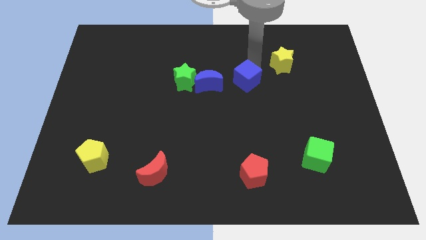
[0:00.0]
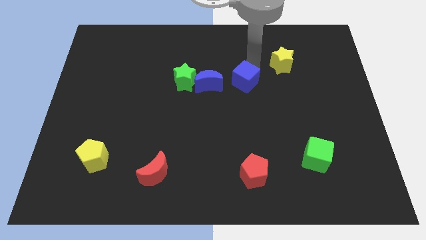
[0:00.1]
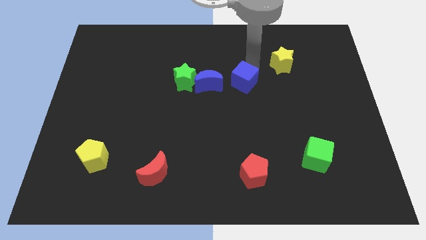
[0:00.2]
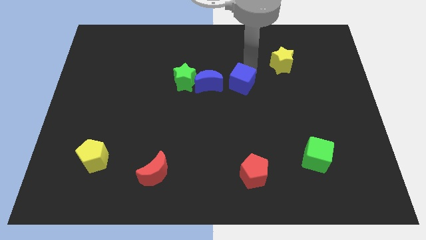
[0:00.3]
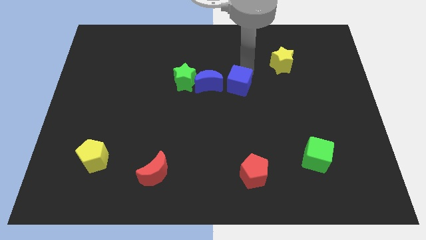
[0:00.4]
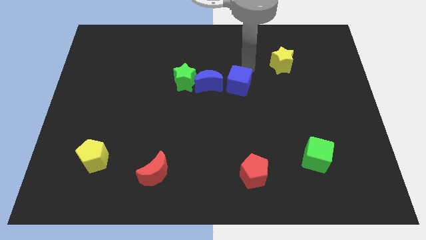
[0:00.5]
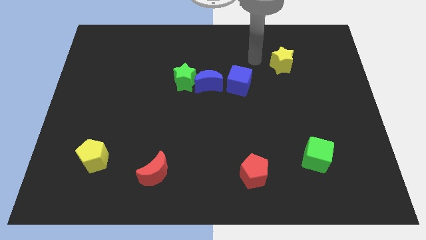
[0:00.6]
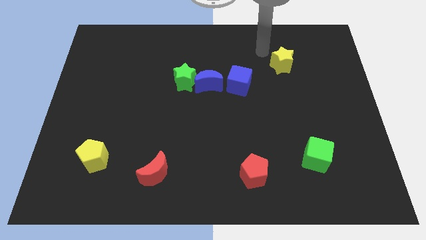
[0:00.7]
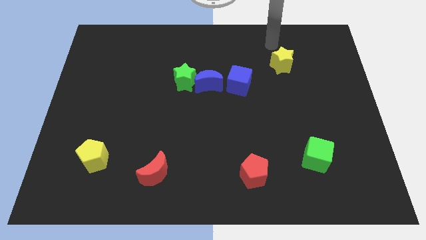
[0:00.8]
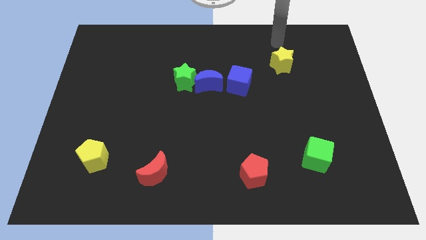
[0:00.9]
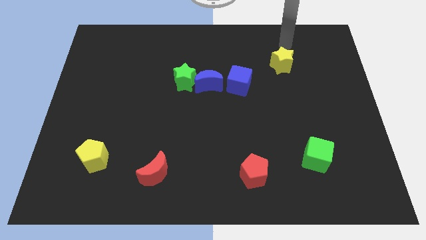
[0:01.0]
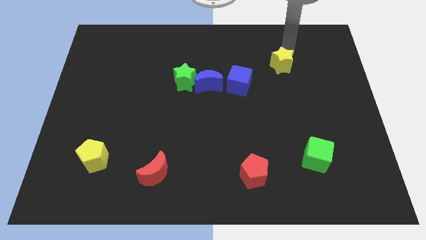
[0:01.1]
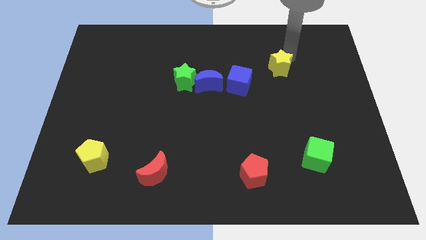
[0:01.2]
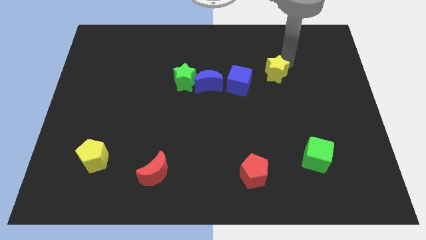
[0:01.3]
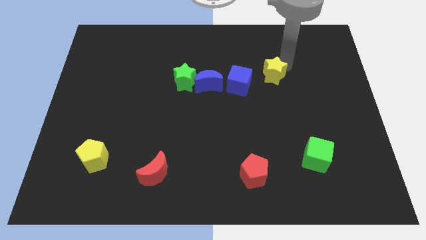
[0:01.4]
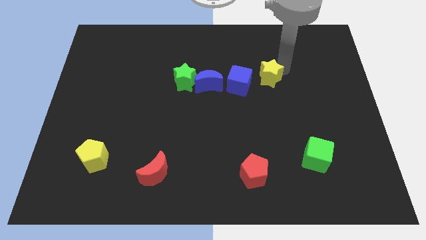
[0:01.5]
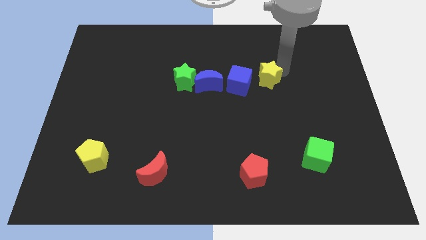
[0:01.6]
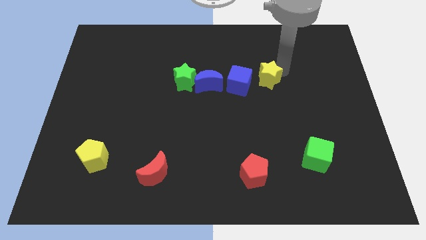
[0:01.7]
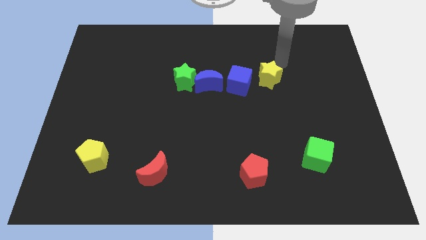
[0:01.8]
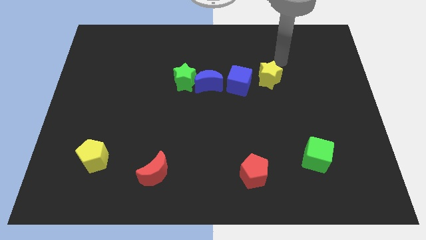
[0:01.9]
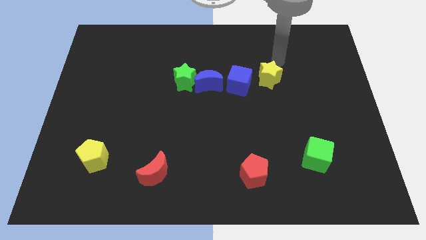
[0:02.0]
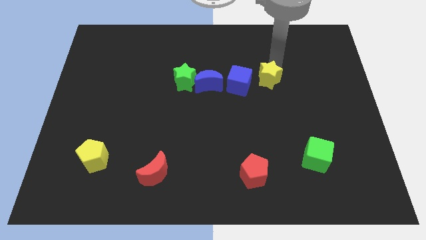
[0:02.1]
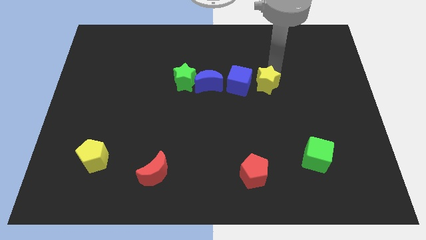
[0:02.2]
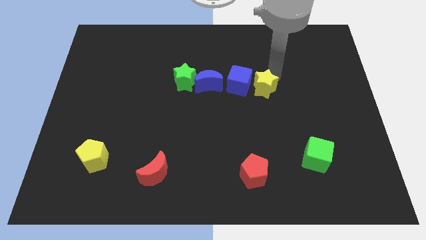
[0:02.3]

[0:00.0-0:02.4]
push yellow star beside the blue cube

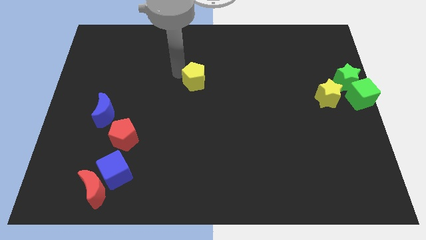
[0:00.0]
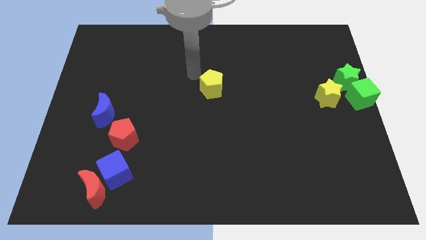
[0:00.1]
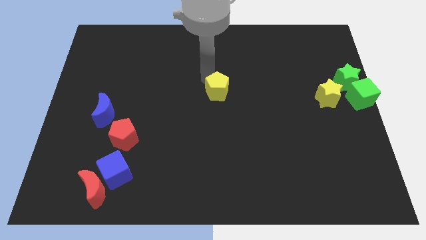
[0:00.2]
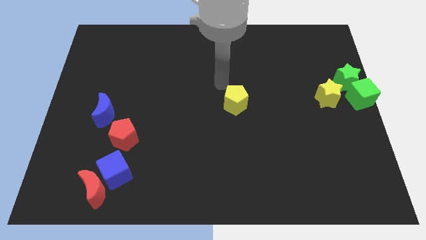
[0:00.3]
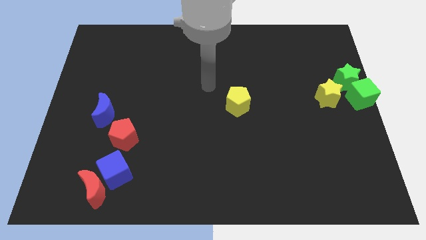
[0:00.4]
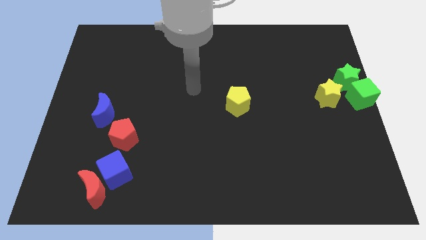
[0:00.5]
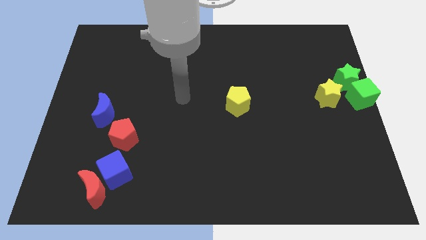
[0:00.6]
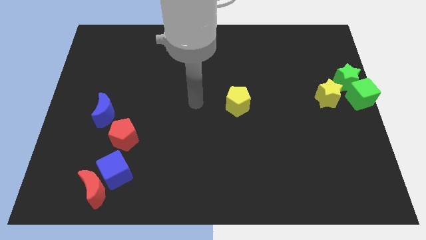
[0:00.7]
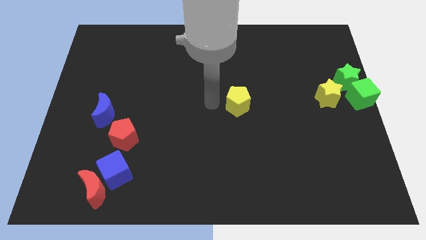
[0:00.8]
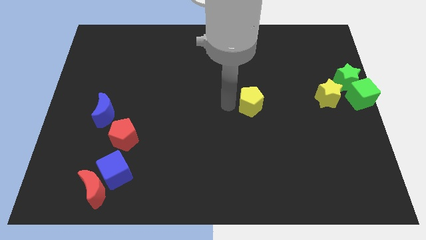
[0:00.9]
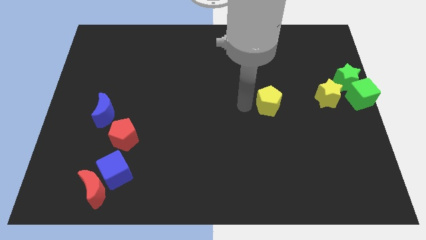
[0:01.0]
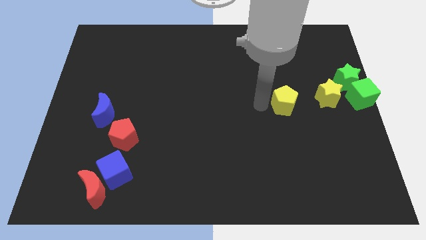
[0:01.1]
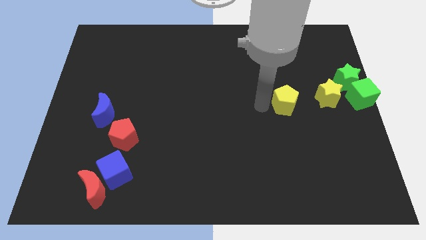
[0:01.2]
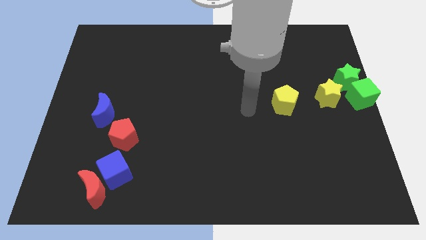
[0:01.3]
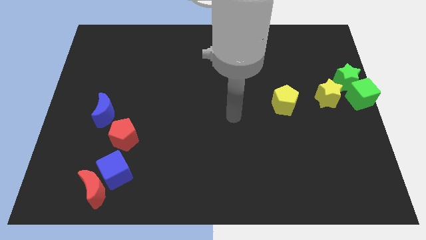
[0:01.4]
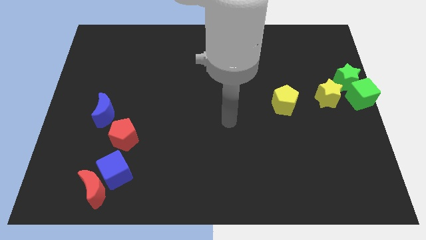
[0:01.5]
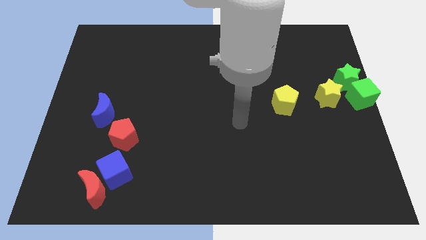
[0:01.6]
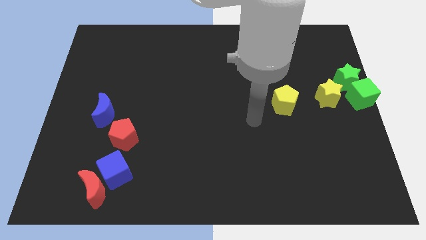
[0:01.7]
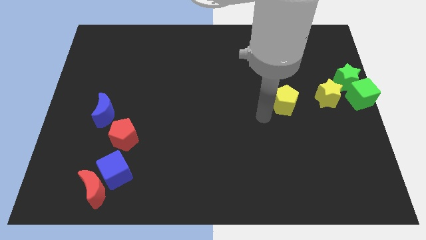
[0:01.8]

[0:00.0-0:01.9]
move the yellow pentagon to the left of the yellow star

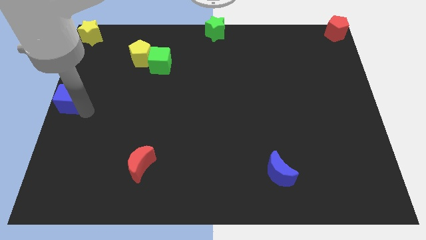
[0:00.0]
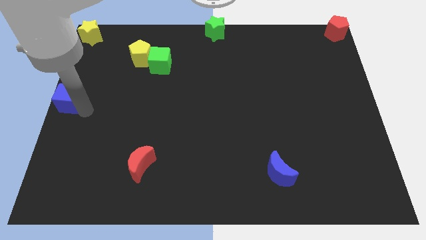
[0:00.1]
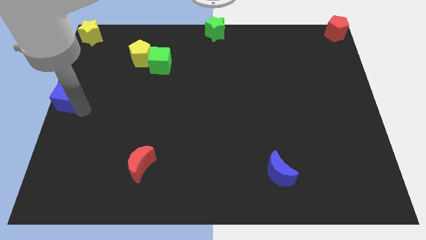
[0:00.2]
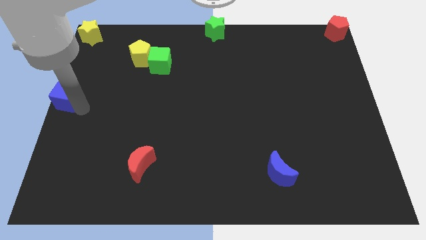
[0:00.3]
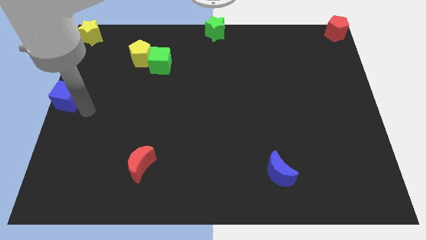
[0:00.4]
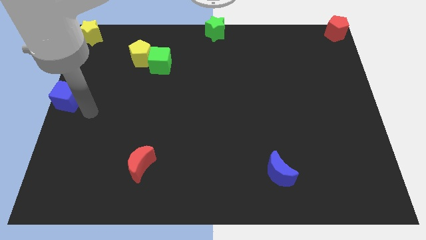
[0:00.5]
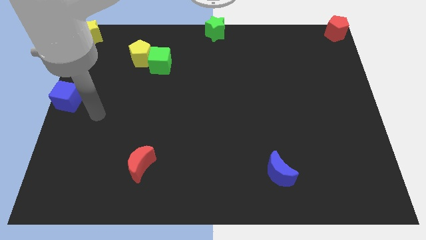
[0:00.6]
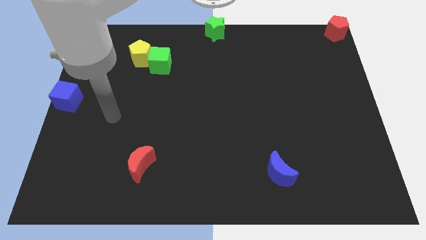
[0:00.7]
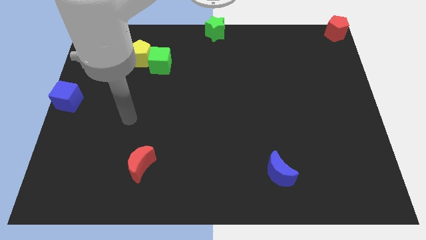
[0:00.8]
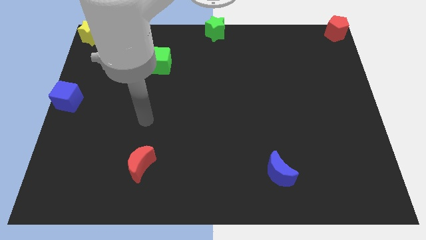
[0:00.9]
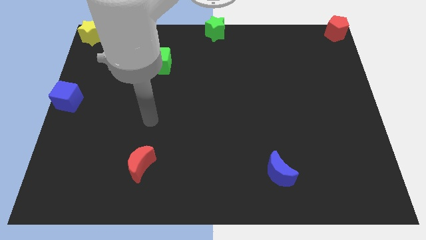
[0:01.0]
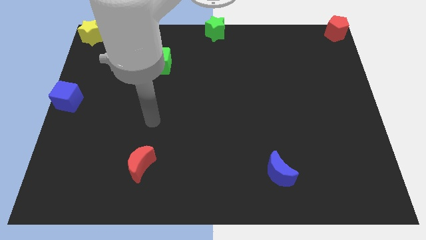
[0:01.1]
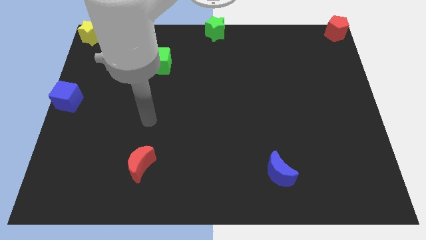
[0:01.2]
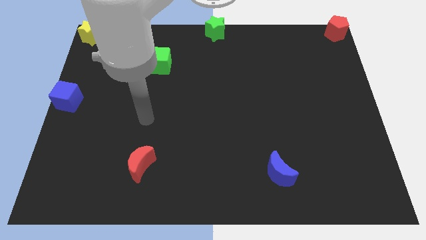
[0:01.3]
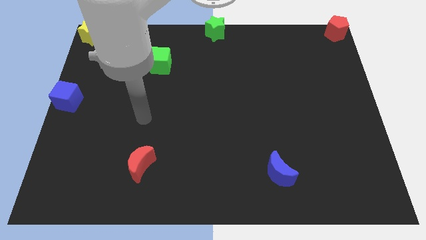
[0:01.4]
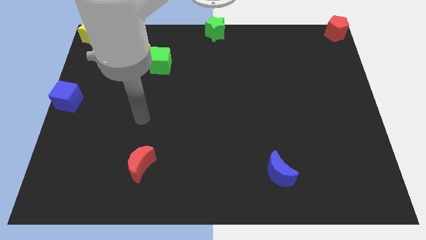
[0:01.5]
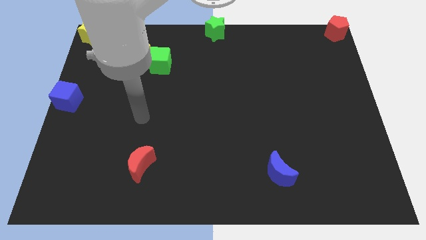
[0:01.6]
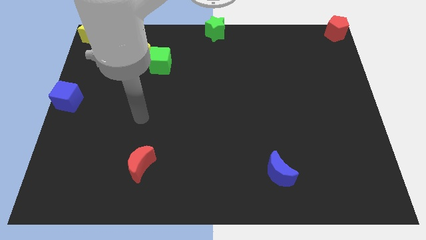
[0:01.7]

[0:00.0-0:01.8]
move the arm away from the blue cube

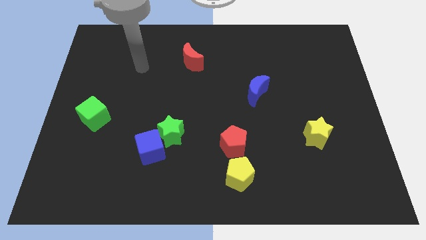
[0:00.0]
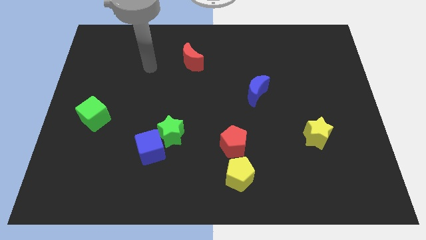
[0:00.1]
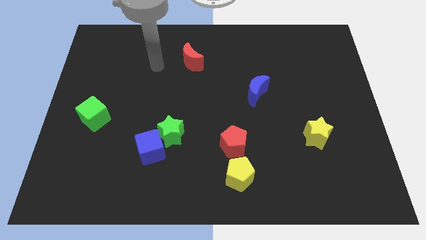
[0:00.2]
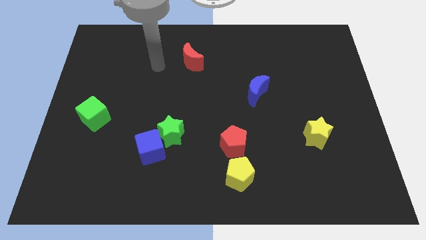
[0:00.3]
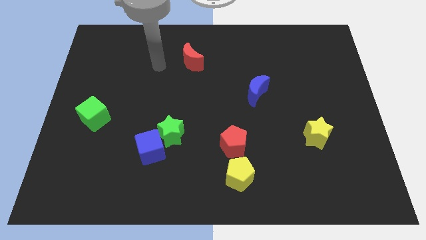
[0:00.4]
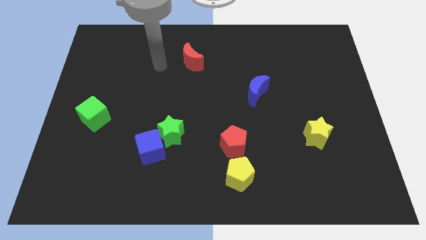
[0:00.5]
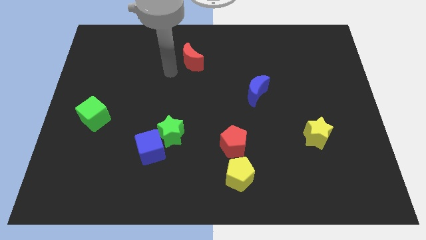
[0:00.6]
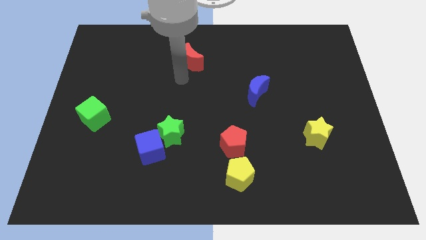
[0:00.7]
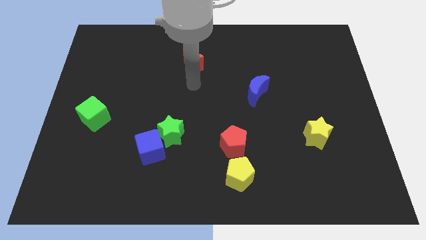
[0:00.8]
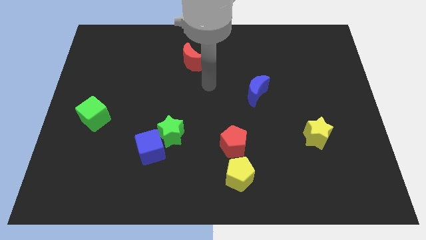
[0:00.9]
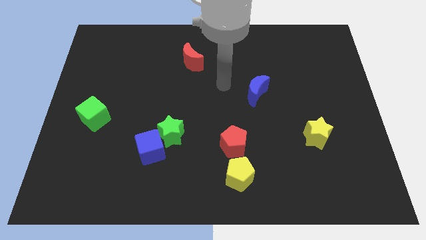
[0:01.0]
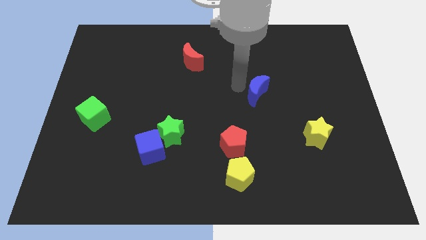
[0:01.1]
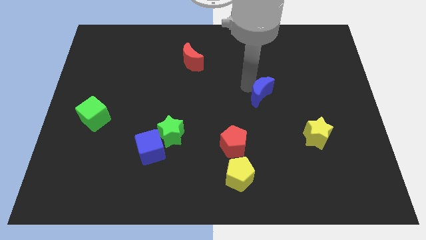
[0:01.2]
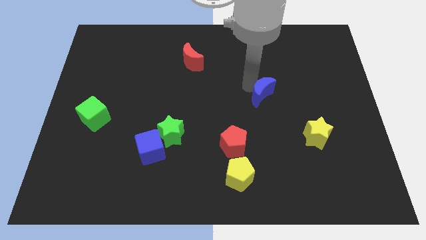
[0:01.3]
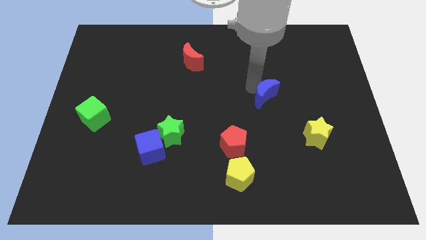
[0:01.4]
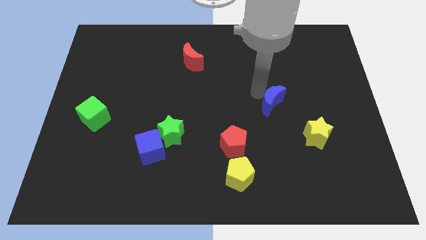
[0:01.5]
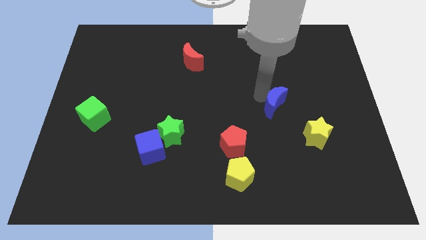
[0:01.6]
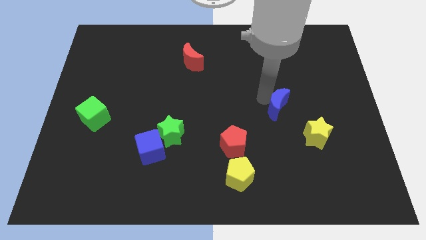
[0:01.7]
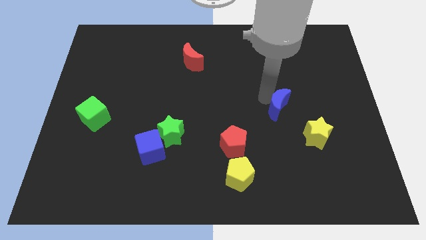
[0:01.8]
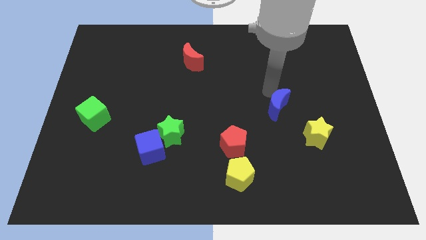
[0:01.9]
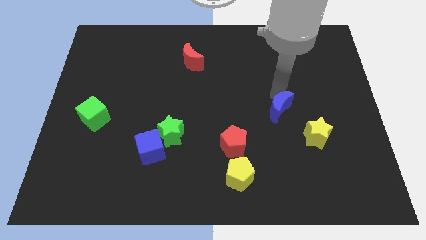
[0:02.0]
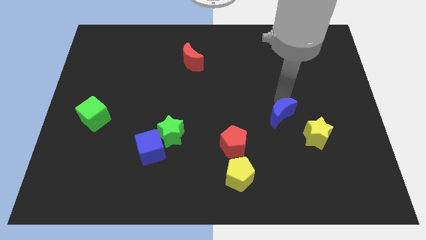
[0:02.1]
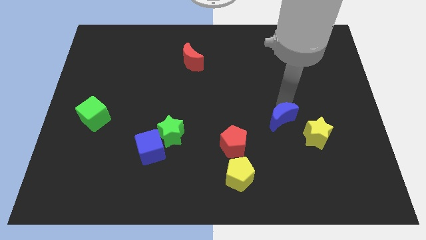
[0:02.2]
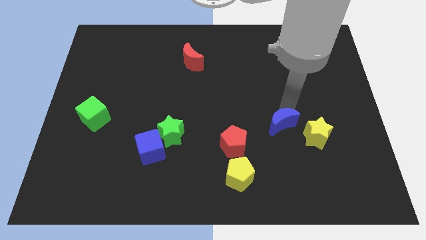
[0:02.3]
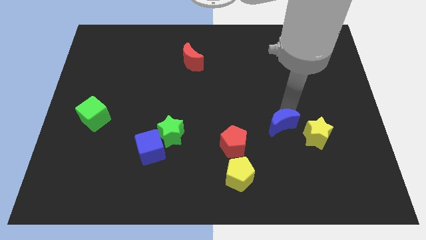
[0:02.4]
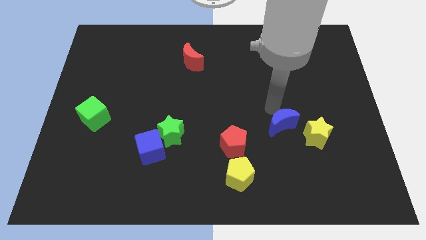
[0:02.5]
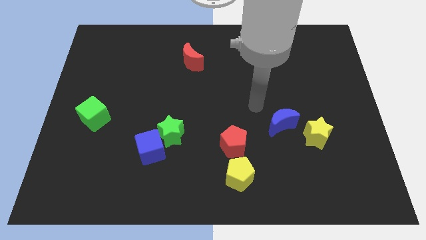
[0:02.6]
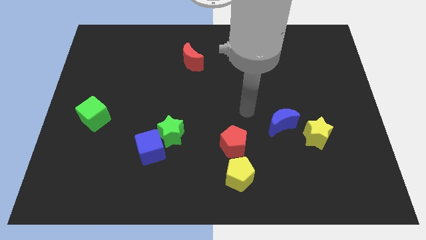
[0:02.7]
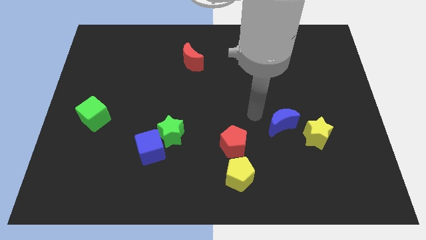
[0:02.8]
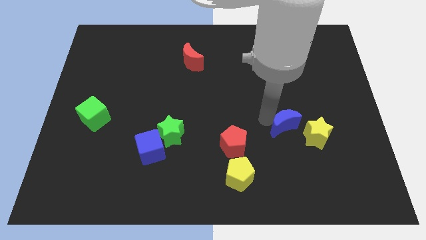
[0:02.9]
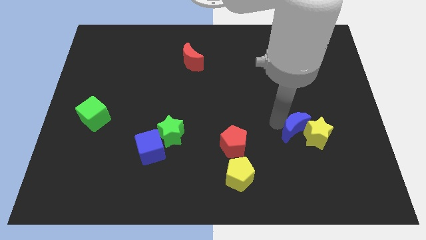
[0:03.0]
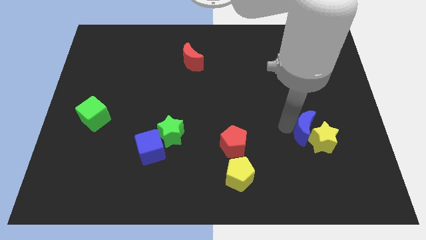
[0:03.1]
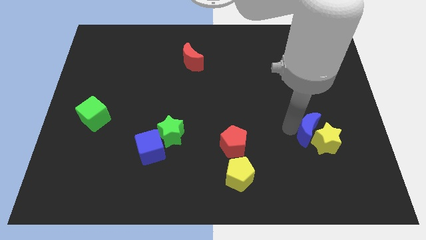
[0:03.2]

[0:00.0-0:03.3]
push the blue moon into the yellow star
